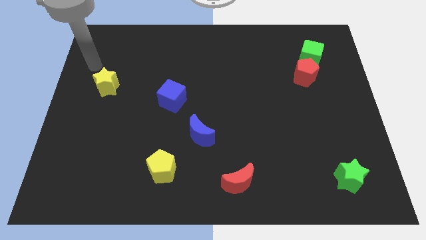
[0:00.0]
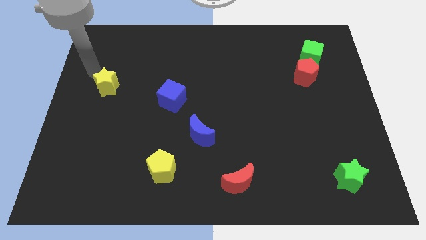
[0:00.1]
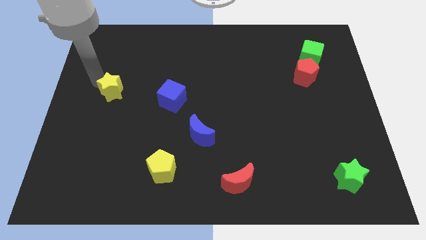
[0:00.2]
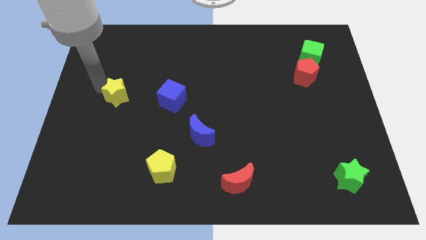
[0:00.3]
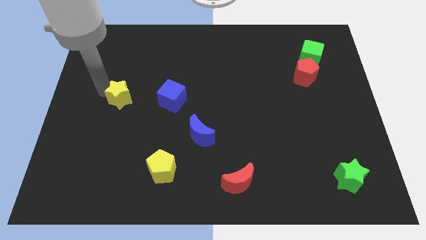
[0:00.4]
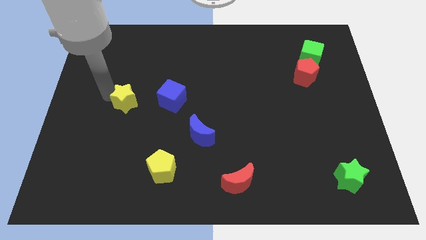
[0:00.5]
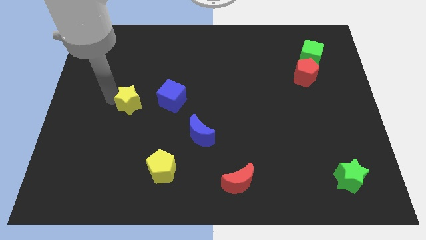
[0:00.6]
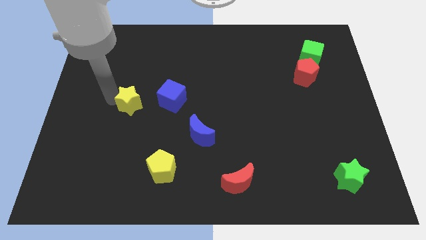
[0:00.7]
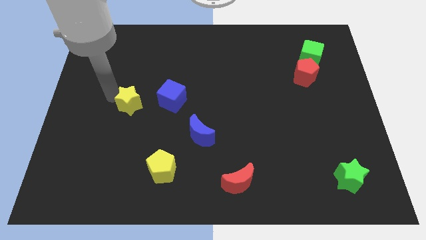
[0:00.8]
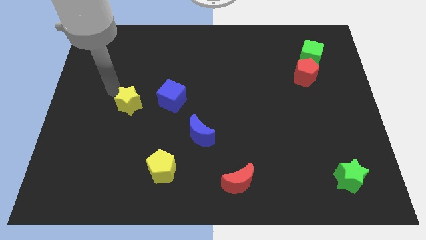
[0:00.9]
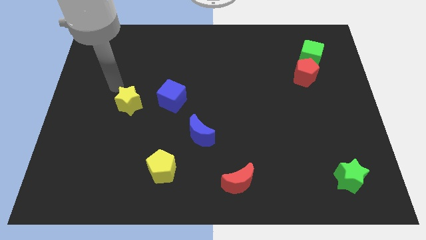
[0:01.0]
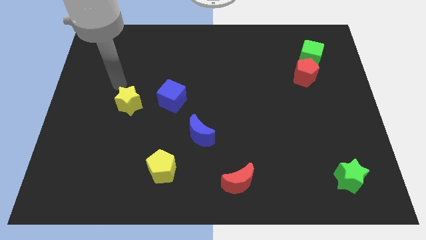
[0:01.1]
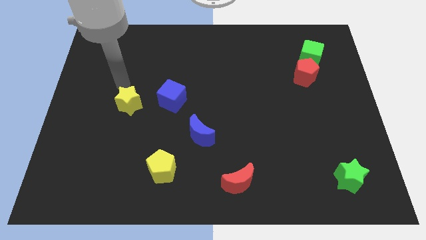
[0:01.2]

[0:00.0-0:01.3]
push the yellow star to the left of the blue cube

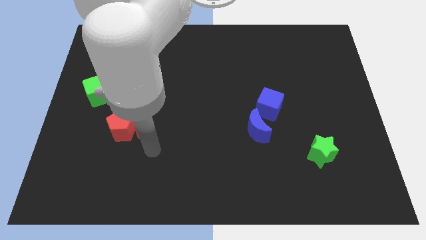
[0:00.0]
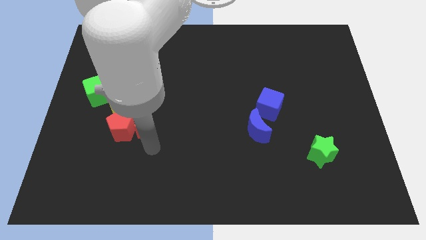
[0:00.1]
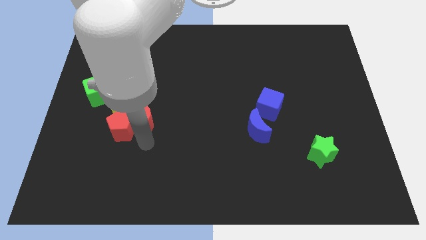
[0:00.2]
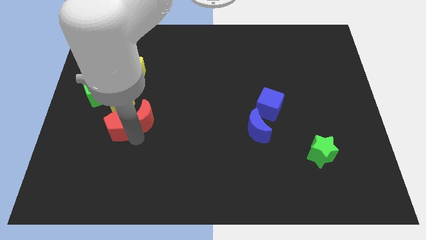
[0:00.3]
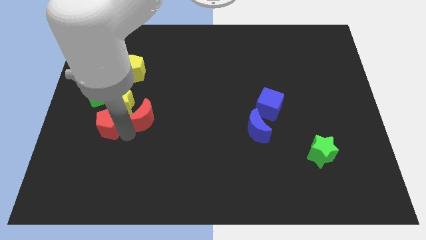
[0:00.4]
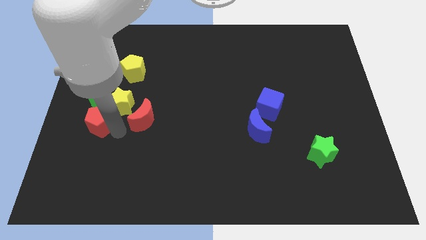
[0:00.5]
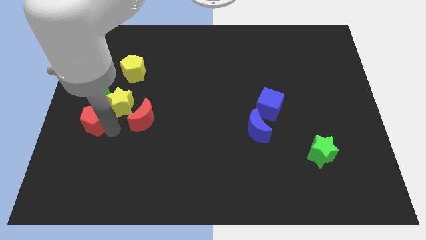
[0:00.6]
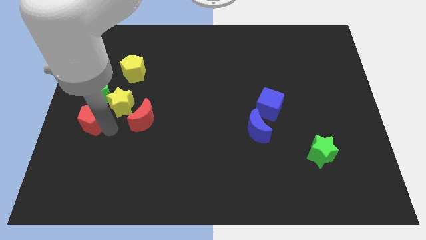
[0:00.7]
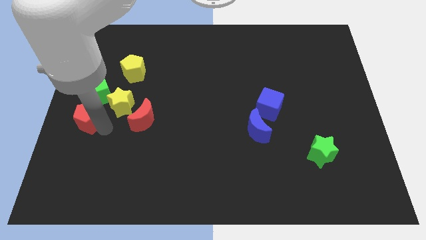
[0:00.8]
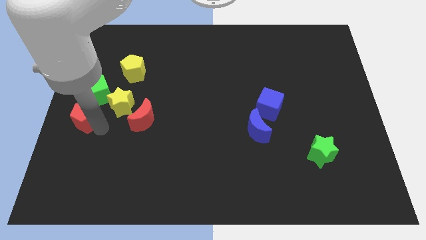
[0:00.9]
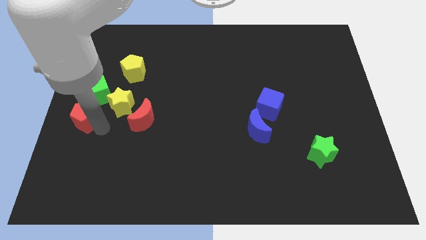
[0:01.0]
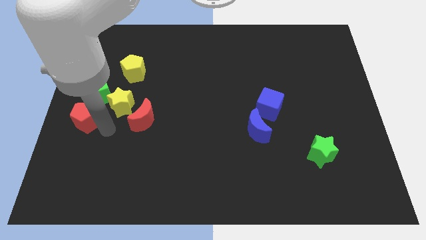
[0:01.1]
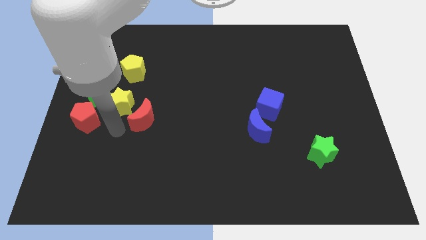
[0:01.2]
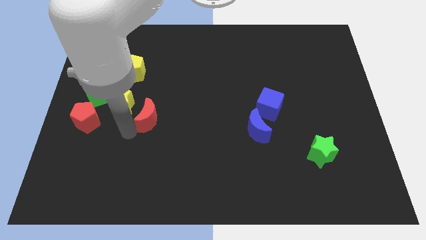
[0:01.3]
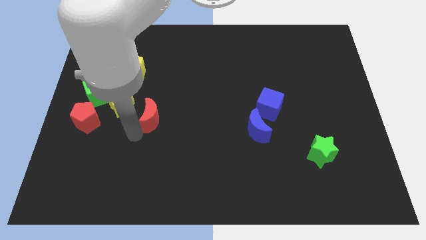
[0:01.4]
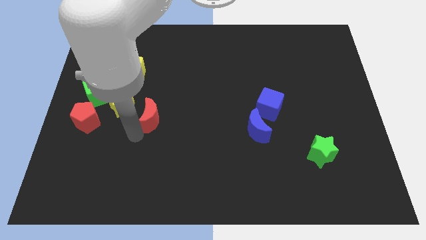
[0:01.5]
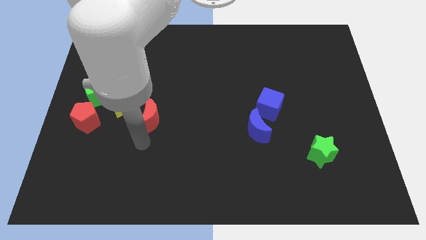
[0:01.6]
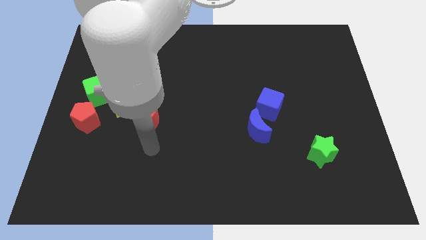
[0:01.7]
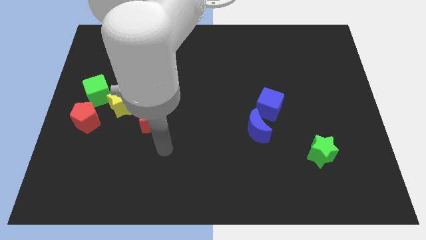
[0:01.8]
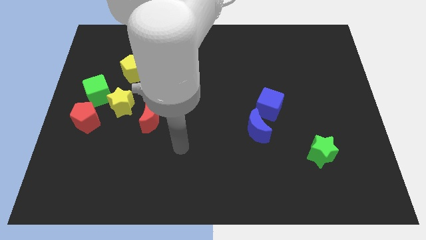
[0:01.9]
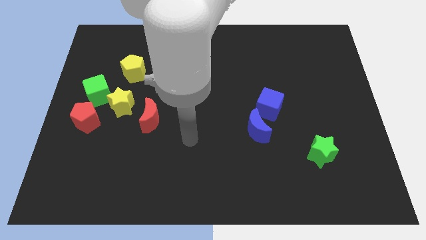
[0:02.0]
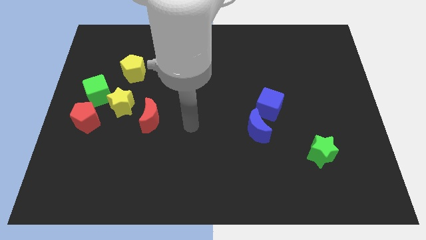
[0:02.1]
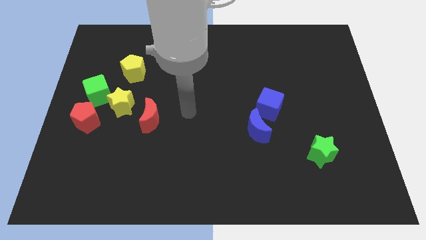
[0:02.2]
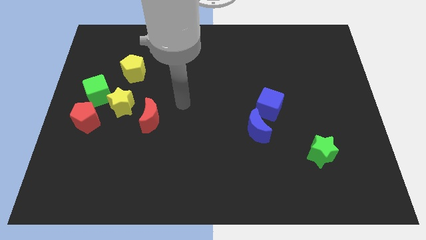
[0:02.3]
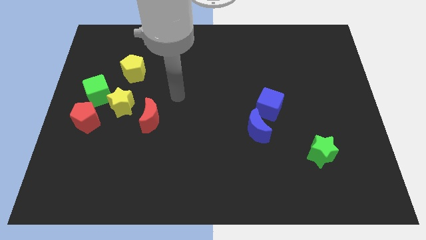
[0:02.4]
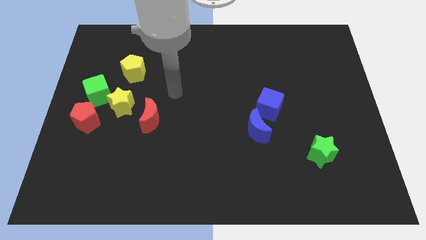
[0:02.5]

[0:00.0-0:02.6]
separate the red crescent and red pentagon

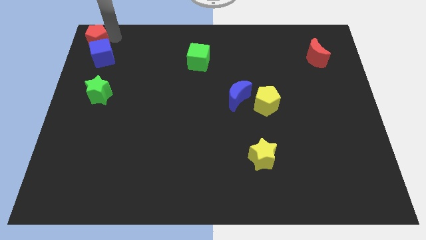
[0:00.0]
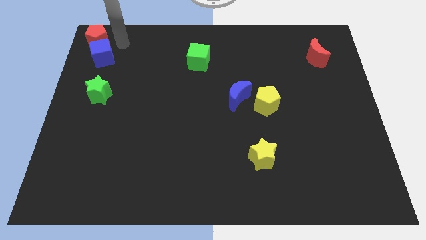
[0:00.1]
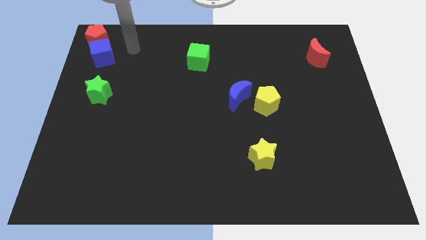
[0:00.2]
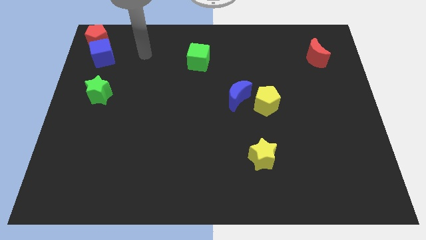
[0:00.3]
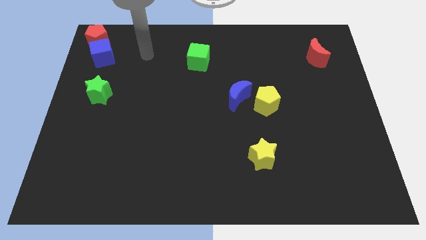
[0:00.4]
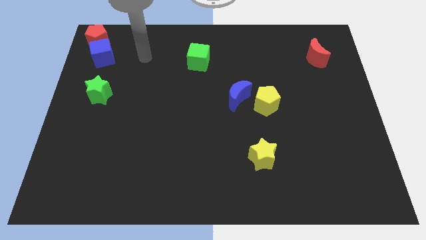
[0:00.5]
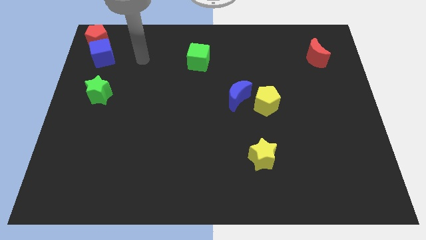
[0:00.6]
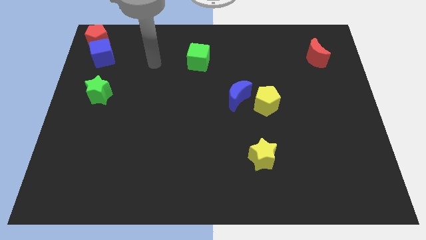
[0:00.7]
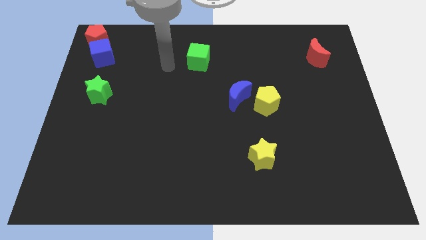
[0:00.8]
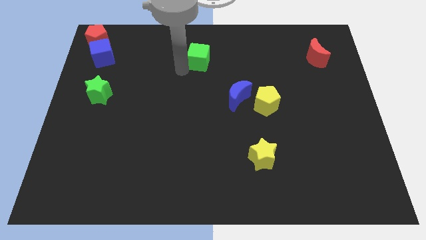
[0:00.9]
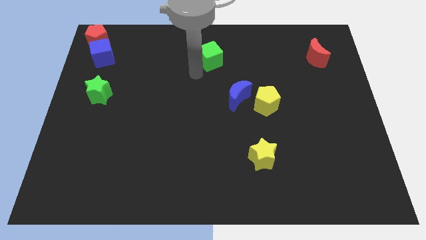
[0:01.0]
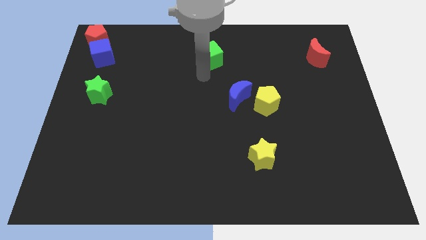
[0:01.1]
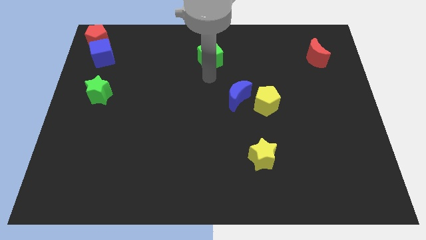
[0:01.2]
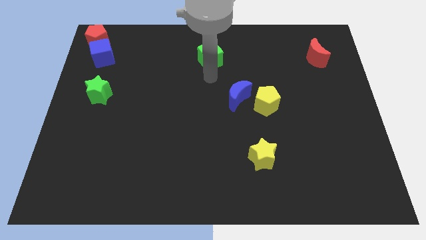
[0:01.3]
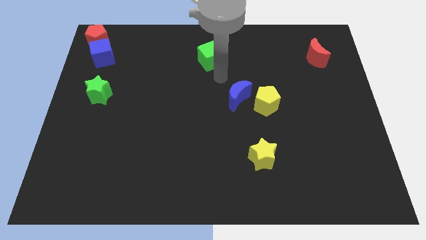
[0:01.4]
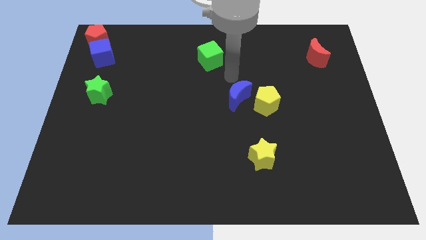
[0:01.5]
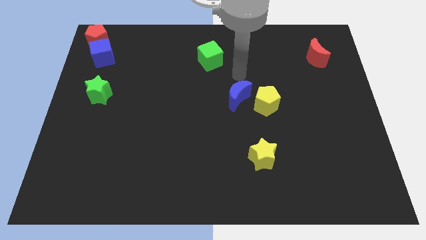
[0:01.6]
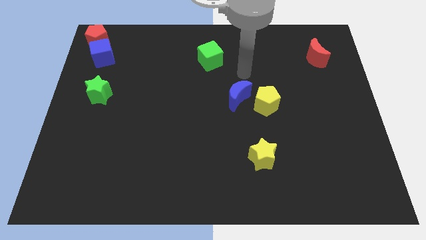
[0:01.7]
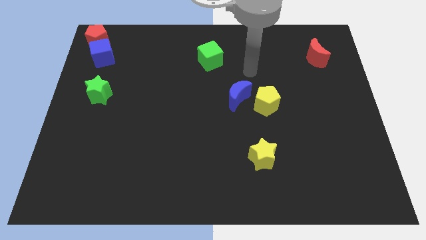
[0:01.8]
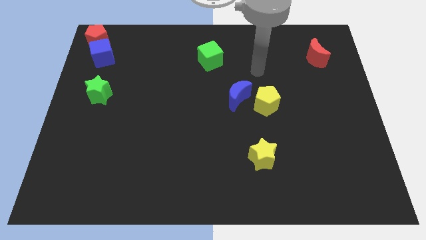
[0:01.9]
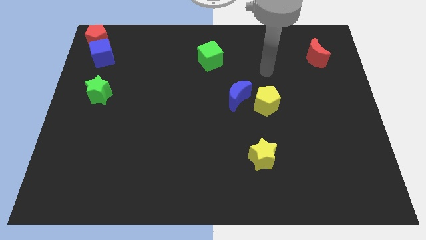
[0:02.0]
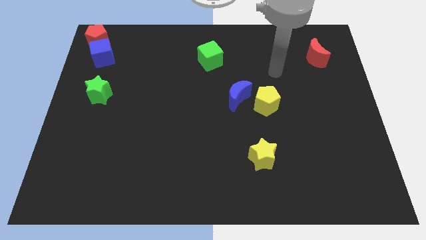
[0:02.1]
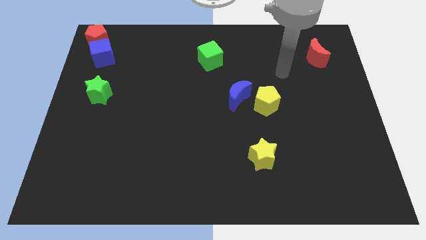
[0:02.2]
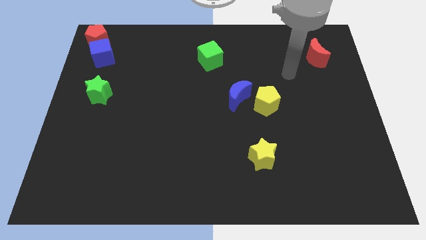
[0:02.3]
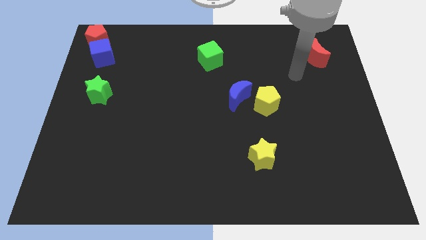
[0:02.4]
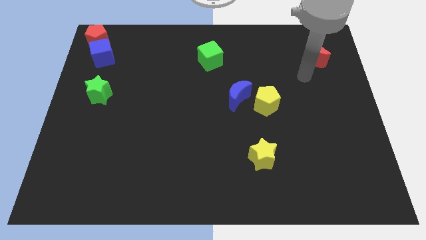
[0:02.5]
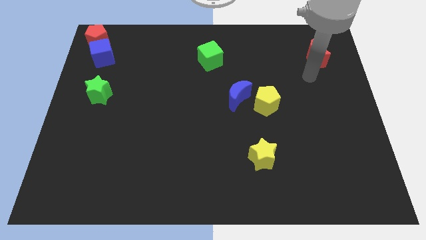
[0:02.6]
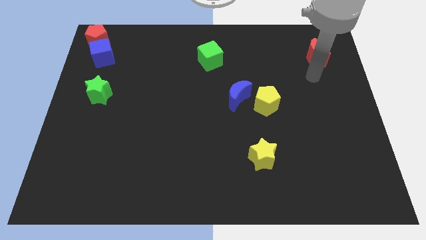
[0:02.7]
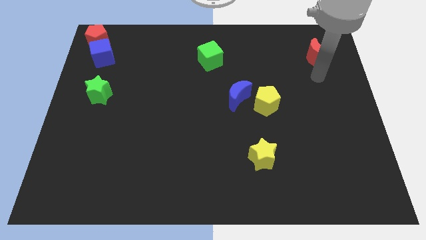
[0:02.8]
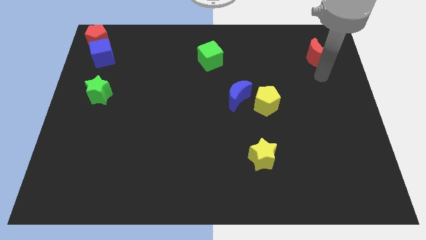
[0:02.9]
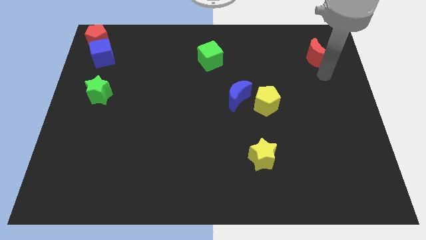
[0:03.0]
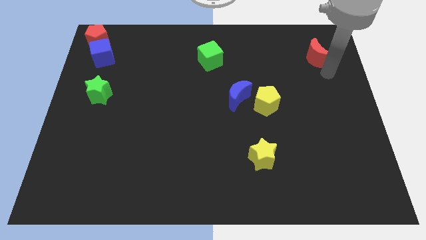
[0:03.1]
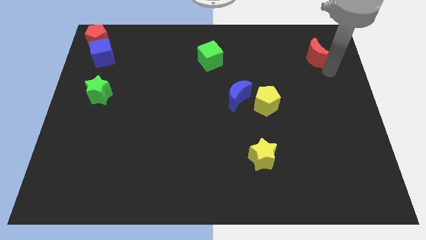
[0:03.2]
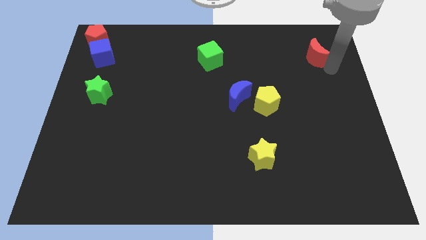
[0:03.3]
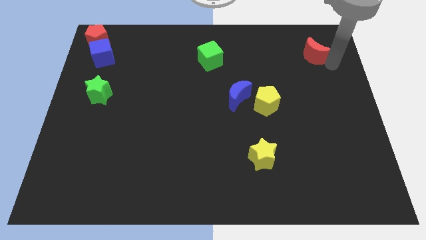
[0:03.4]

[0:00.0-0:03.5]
move the green cube slightly on the right side

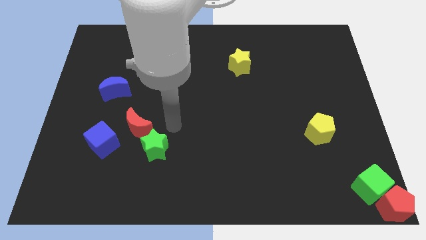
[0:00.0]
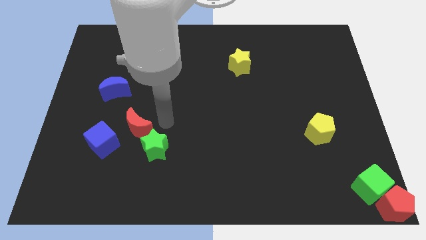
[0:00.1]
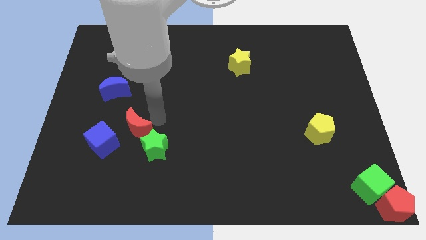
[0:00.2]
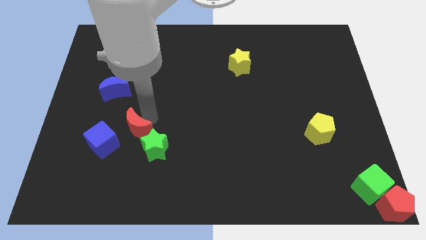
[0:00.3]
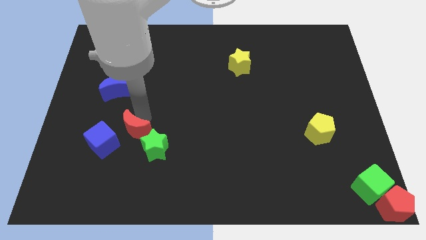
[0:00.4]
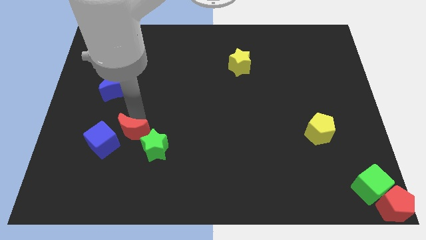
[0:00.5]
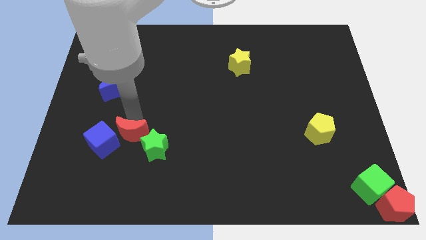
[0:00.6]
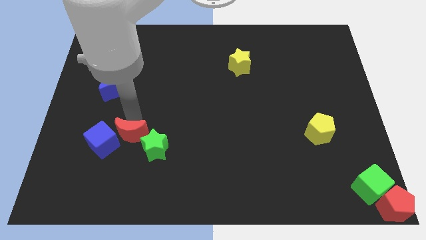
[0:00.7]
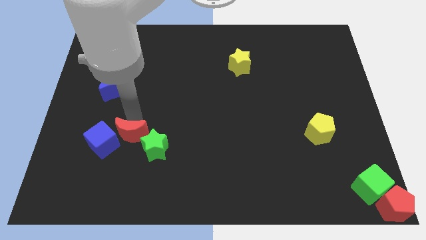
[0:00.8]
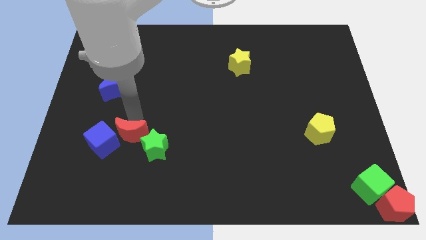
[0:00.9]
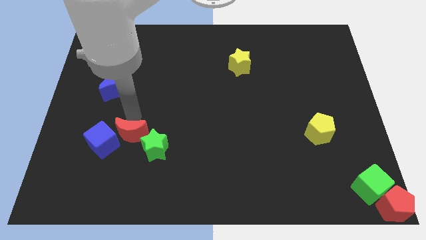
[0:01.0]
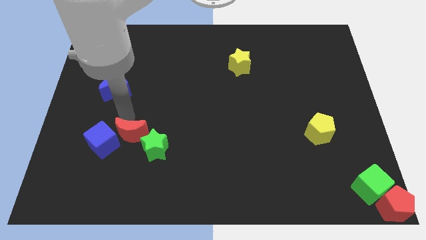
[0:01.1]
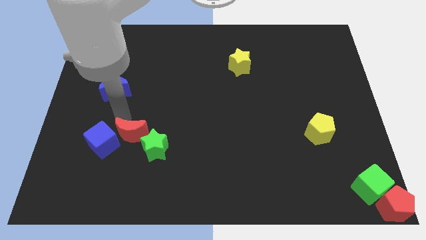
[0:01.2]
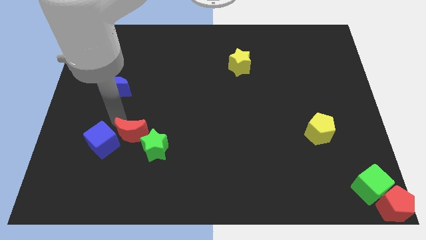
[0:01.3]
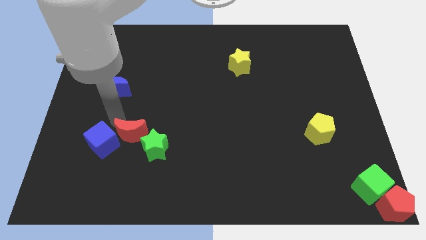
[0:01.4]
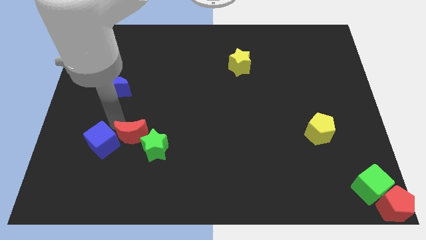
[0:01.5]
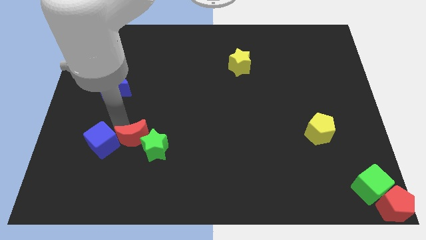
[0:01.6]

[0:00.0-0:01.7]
push the red crescent to the top left of the green star

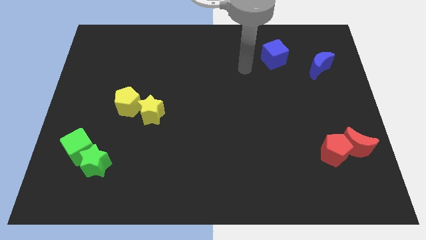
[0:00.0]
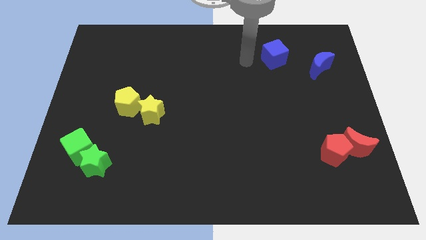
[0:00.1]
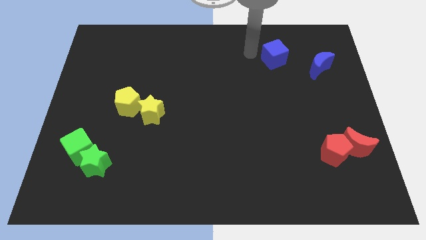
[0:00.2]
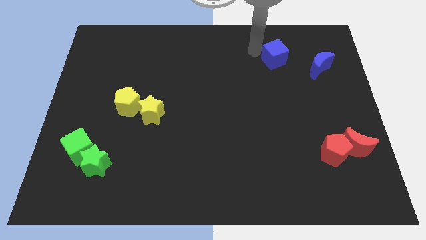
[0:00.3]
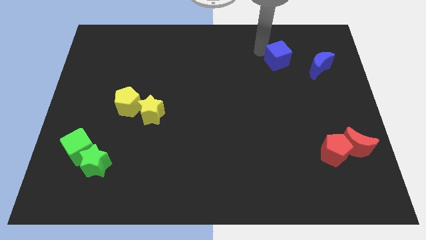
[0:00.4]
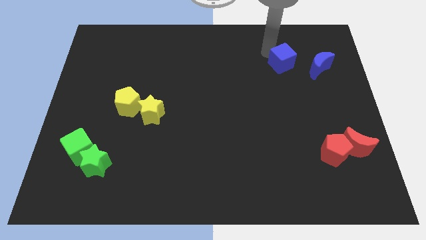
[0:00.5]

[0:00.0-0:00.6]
tap the blue cube
